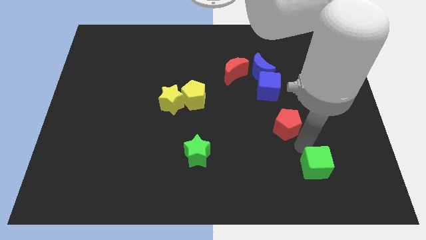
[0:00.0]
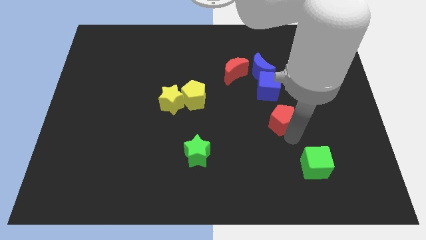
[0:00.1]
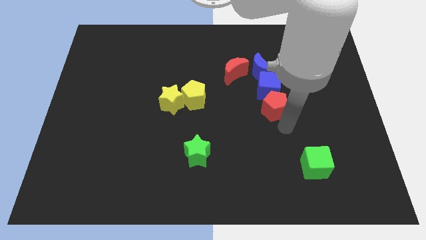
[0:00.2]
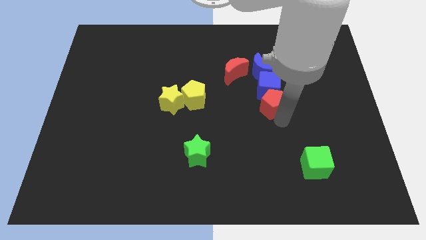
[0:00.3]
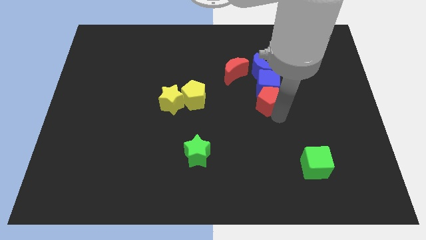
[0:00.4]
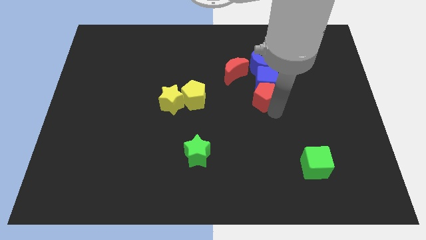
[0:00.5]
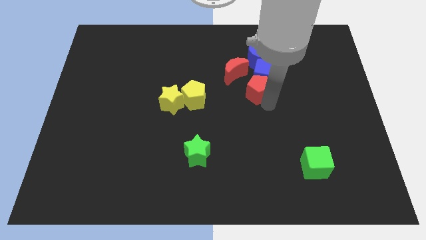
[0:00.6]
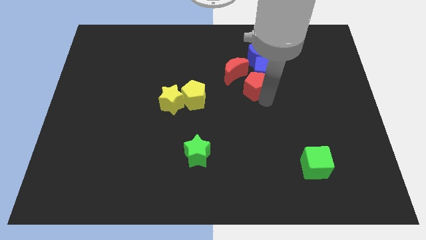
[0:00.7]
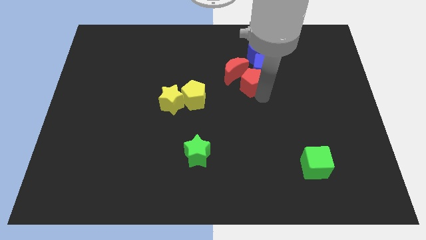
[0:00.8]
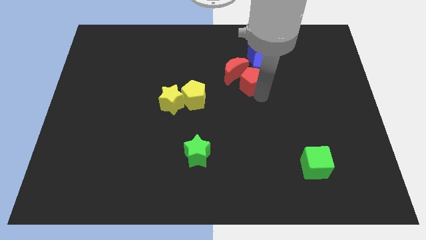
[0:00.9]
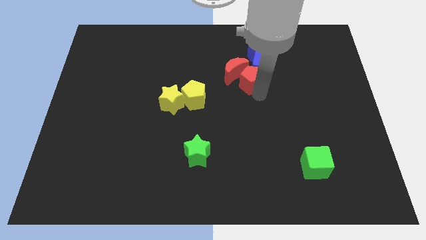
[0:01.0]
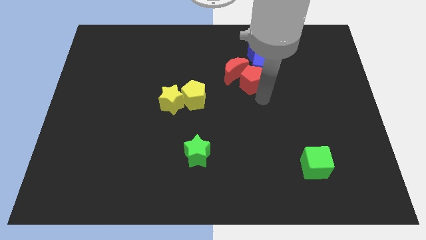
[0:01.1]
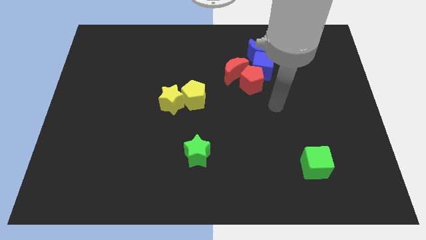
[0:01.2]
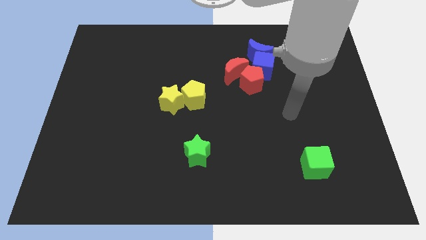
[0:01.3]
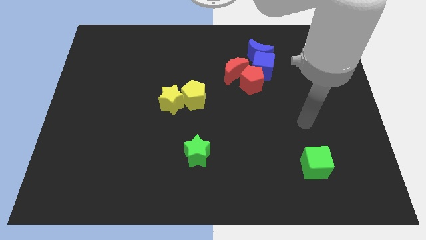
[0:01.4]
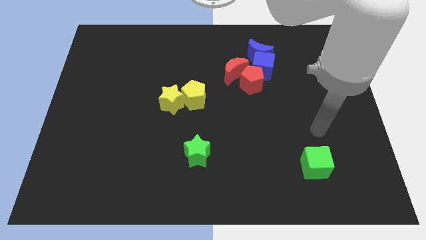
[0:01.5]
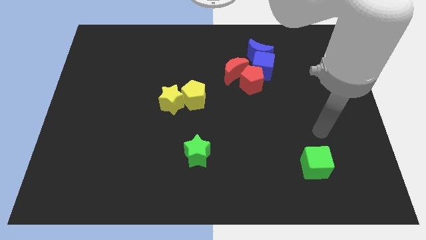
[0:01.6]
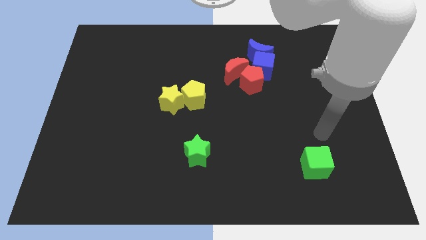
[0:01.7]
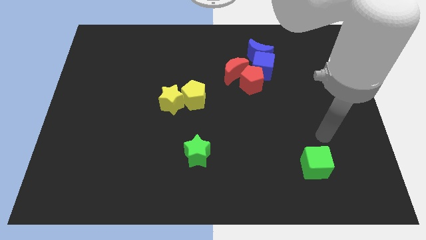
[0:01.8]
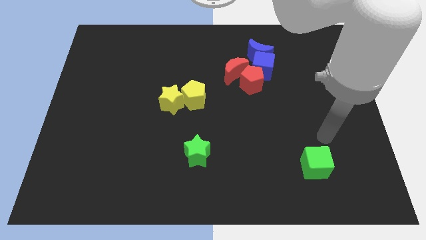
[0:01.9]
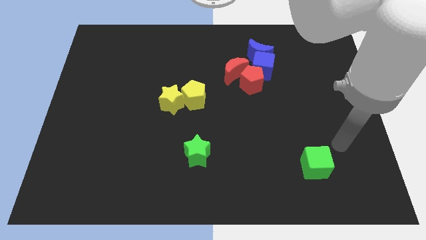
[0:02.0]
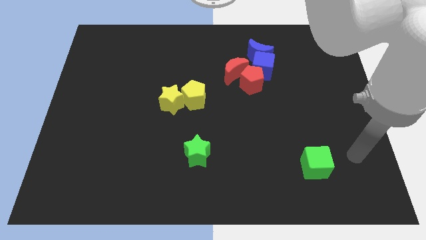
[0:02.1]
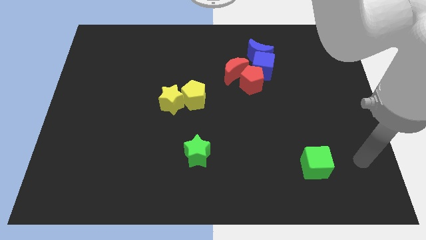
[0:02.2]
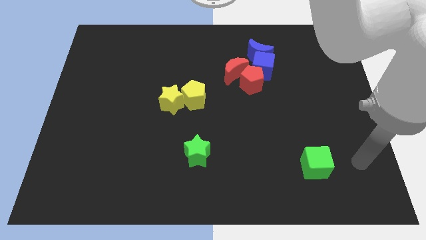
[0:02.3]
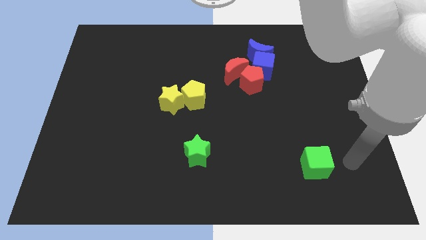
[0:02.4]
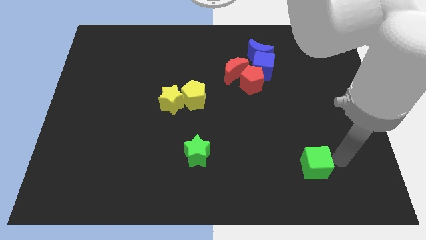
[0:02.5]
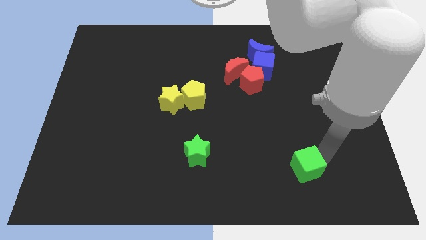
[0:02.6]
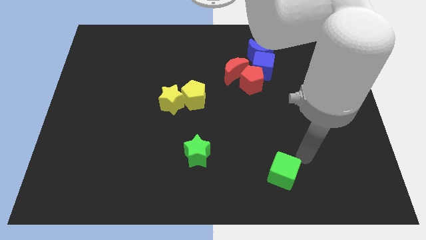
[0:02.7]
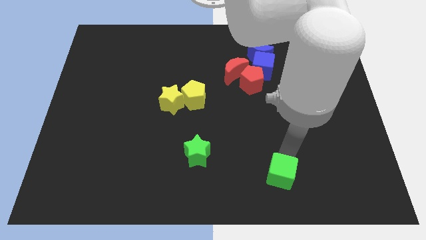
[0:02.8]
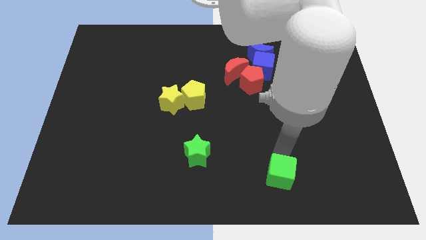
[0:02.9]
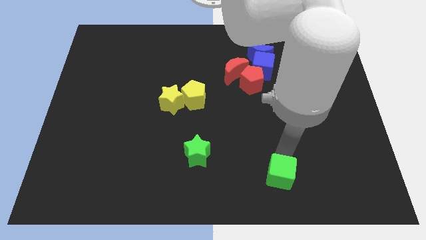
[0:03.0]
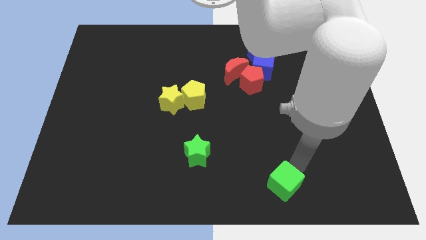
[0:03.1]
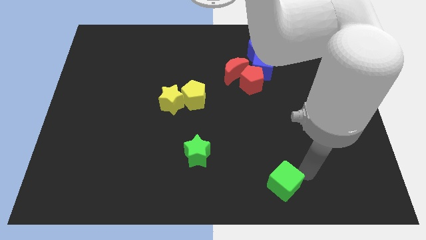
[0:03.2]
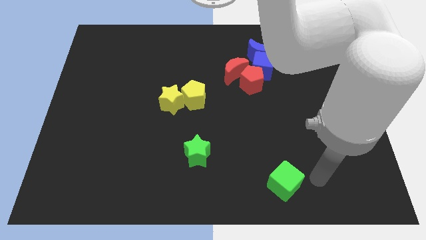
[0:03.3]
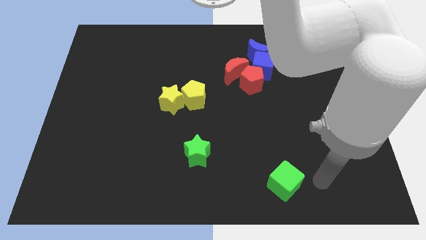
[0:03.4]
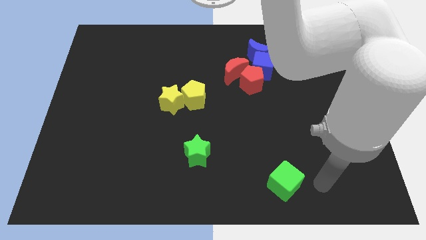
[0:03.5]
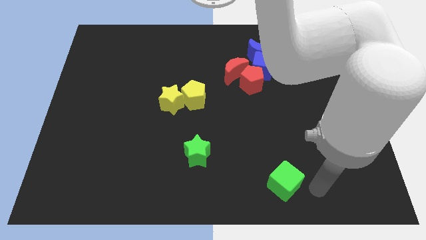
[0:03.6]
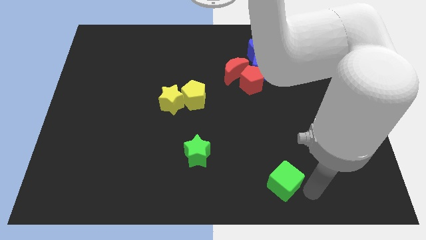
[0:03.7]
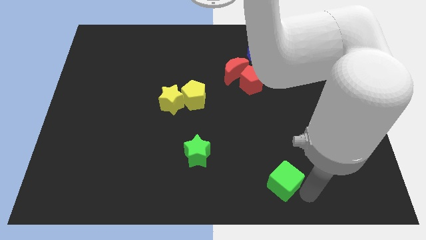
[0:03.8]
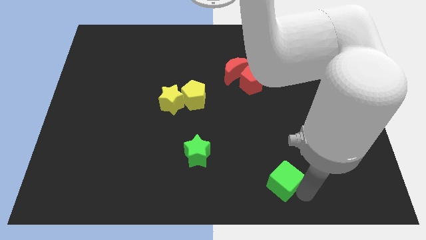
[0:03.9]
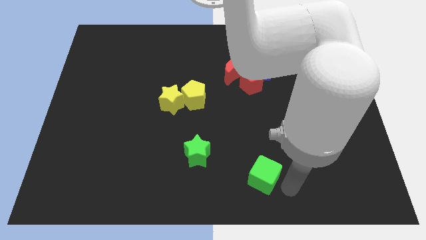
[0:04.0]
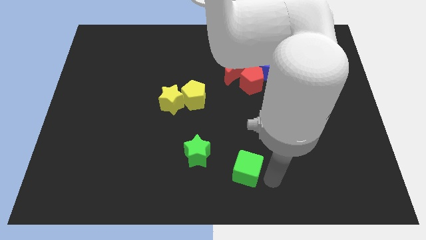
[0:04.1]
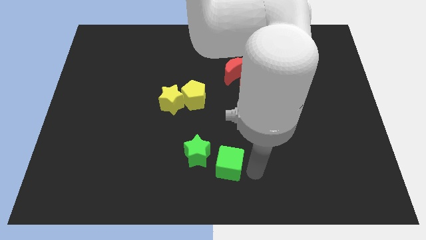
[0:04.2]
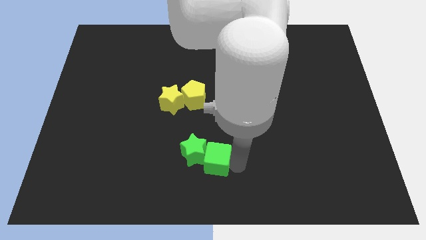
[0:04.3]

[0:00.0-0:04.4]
push the red pentagon into the red crescent

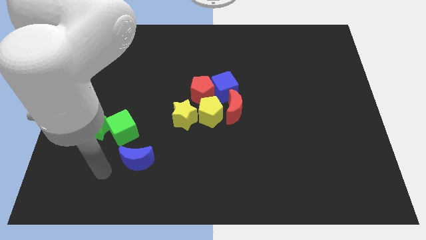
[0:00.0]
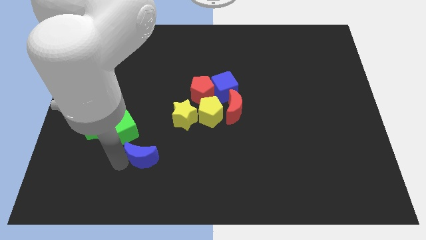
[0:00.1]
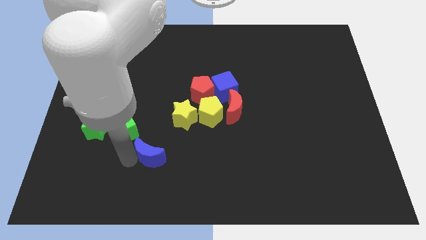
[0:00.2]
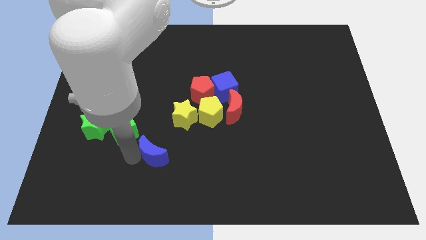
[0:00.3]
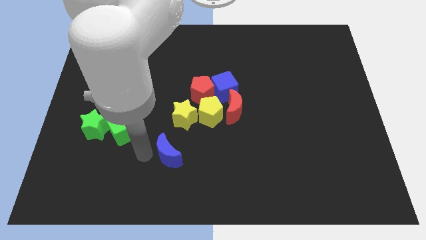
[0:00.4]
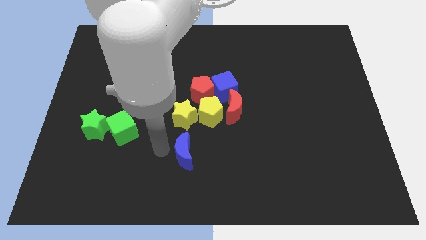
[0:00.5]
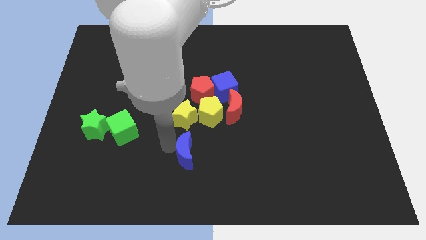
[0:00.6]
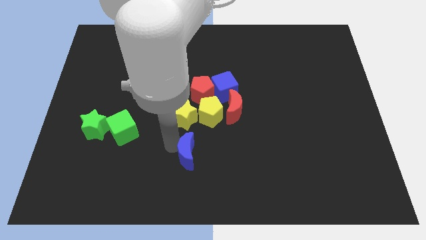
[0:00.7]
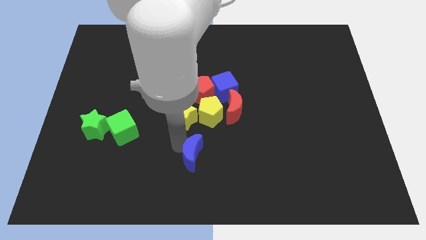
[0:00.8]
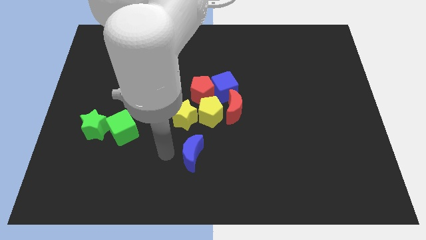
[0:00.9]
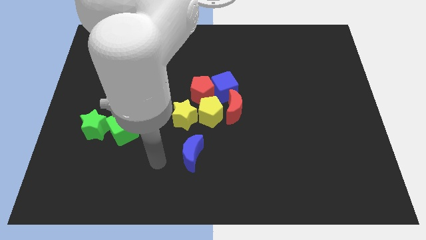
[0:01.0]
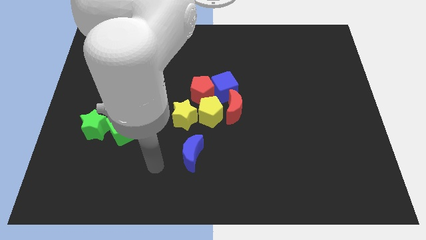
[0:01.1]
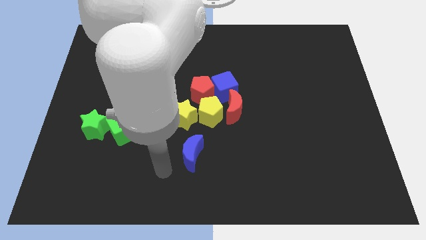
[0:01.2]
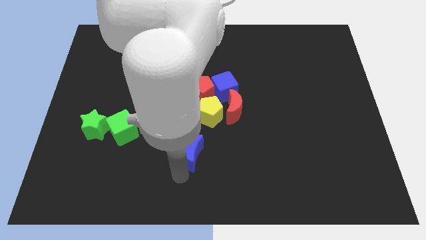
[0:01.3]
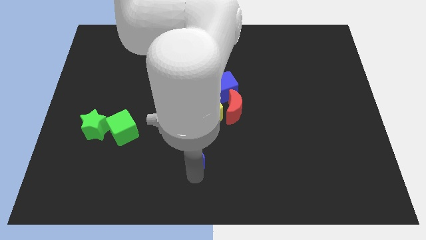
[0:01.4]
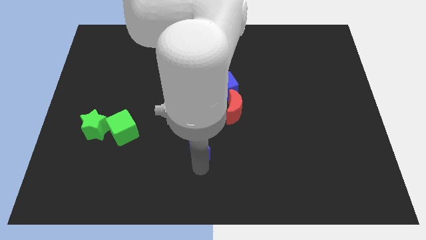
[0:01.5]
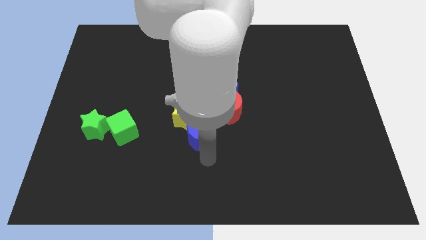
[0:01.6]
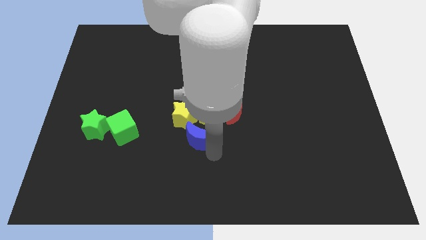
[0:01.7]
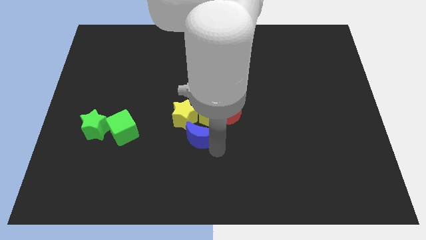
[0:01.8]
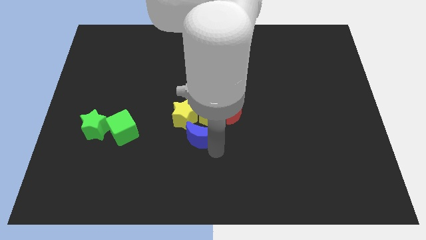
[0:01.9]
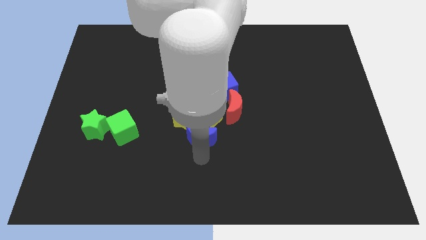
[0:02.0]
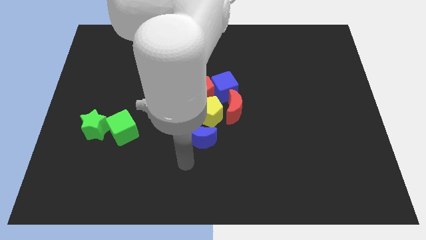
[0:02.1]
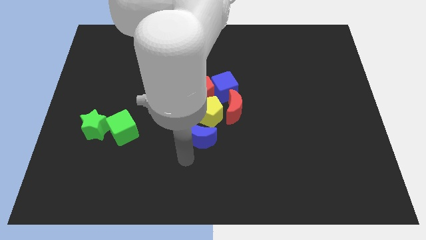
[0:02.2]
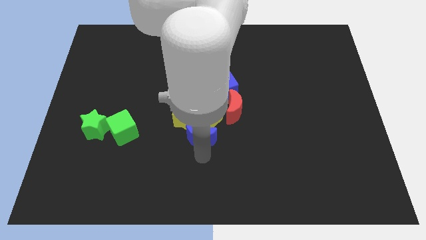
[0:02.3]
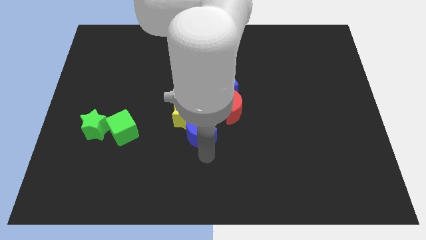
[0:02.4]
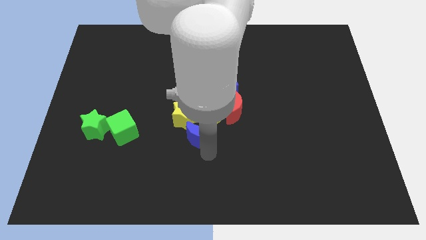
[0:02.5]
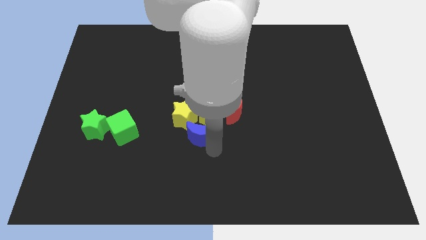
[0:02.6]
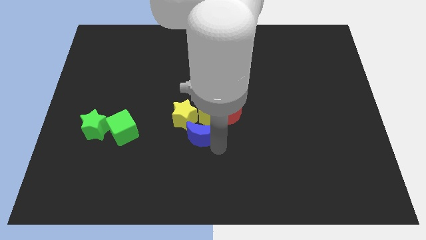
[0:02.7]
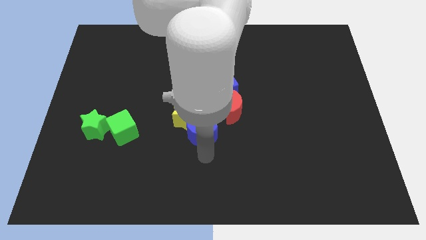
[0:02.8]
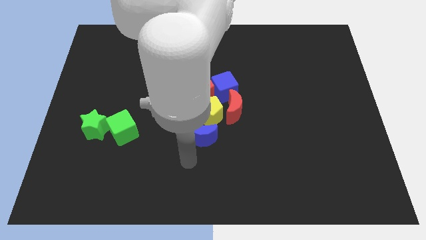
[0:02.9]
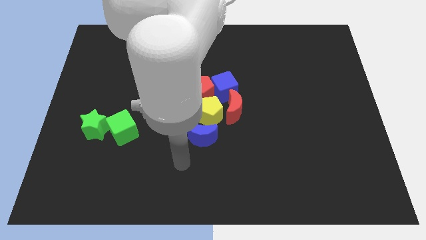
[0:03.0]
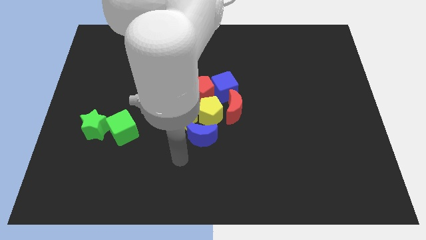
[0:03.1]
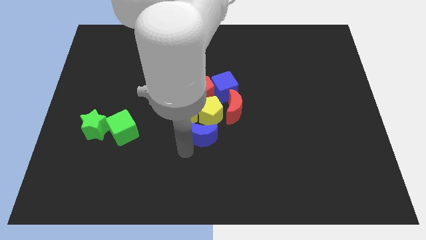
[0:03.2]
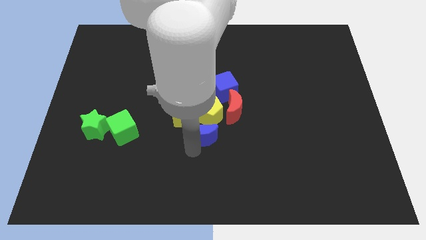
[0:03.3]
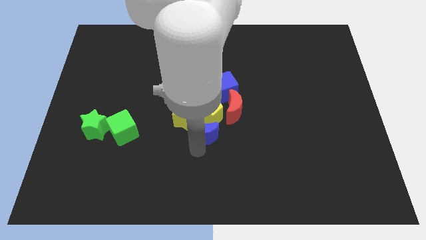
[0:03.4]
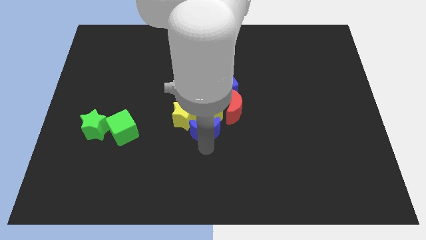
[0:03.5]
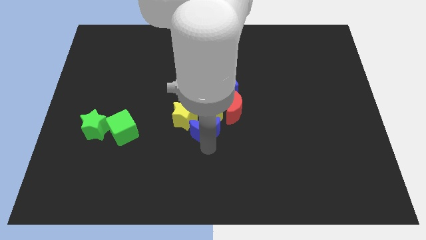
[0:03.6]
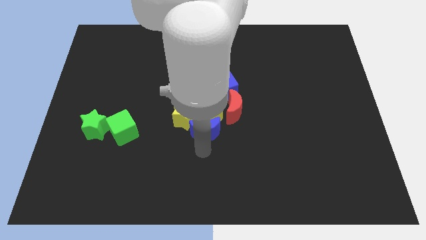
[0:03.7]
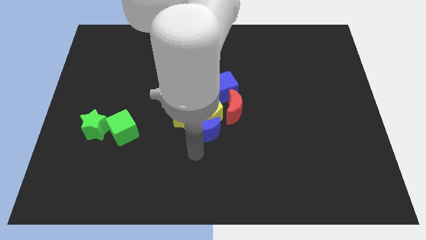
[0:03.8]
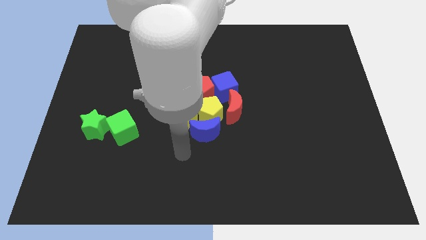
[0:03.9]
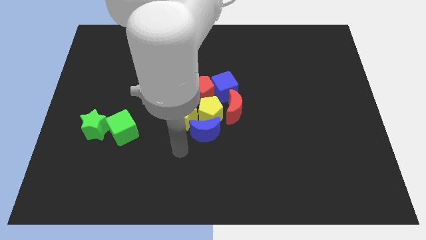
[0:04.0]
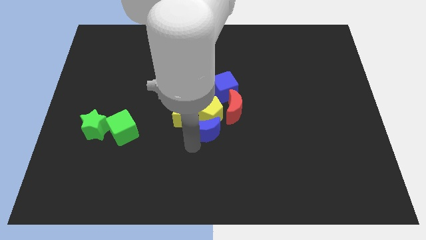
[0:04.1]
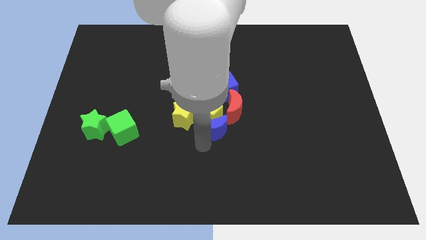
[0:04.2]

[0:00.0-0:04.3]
slide the blue moon close to the group of blocks

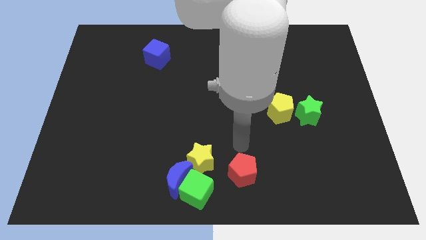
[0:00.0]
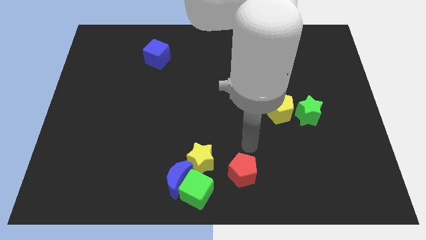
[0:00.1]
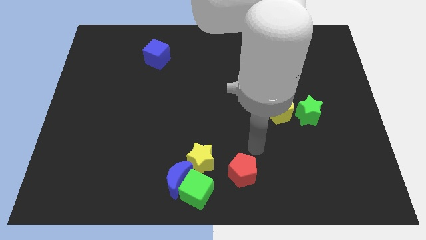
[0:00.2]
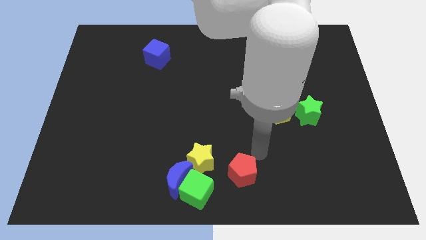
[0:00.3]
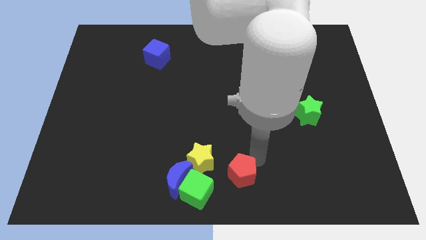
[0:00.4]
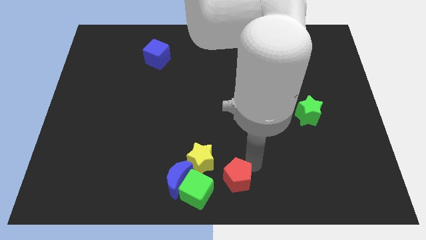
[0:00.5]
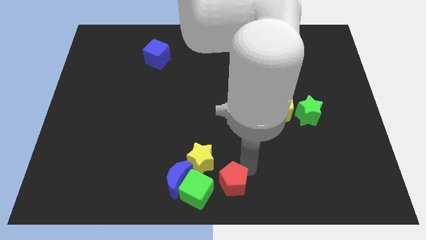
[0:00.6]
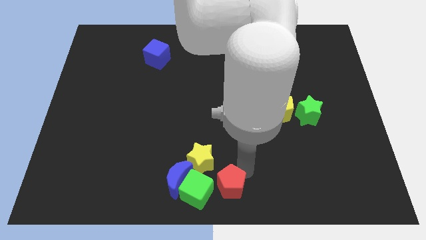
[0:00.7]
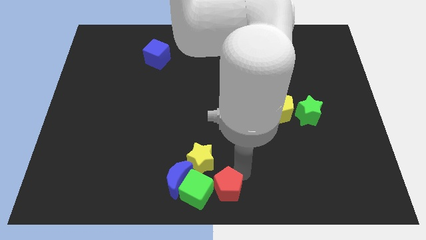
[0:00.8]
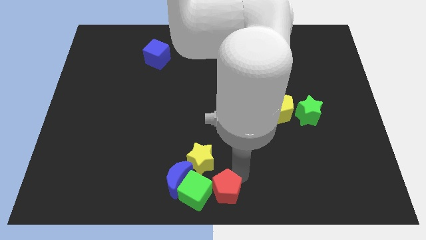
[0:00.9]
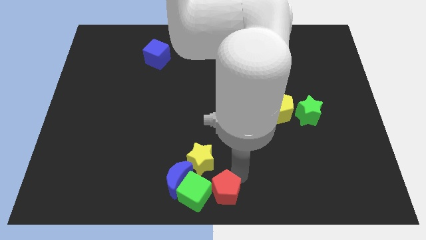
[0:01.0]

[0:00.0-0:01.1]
make the red pentagon touch the right side of the green cube
